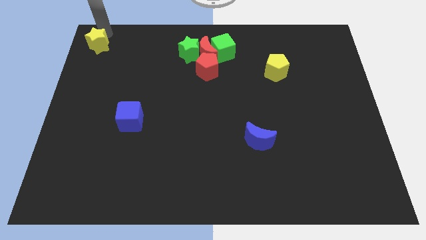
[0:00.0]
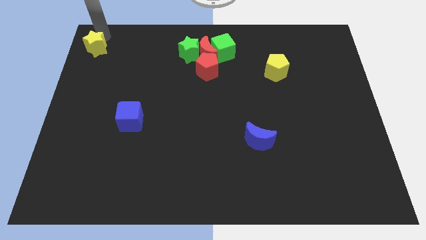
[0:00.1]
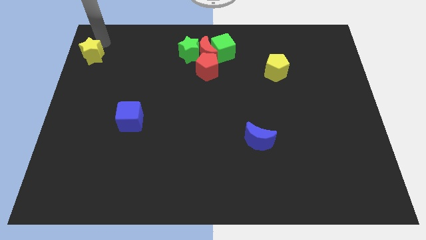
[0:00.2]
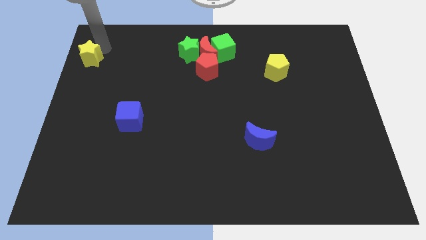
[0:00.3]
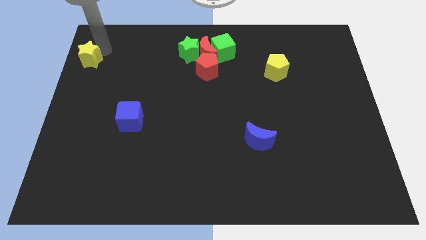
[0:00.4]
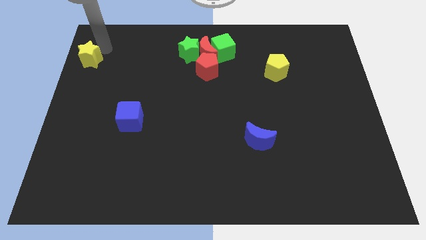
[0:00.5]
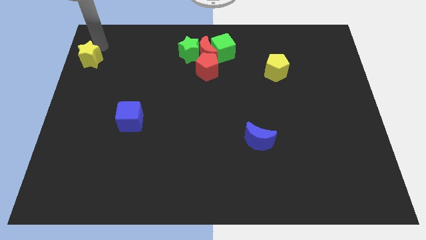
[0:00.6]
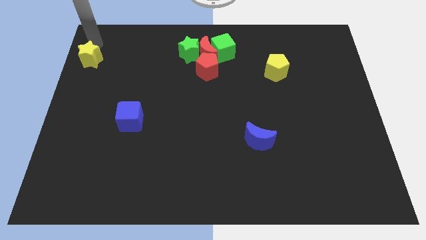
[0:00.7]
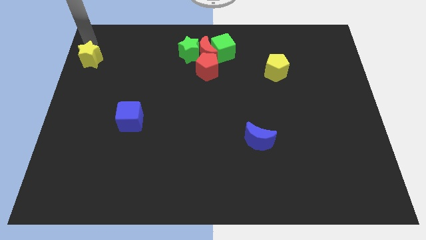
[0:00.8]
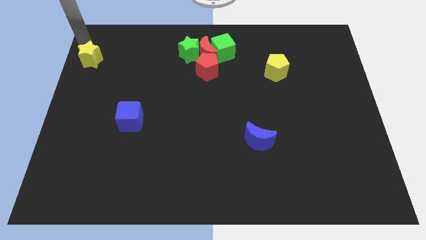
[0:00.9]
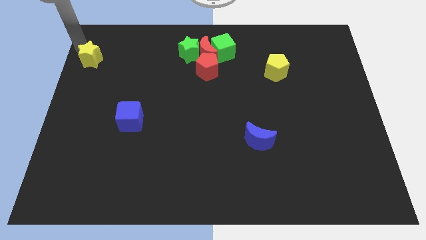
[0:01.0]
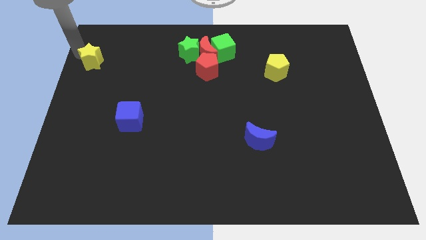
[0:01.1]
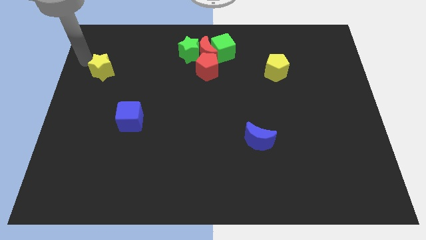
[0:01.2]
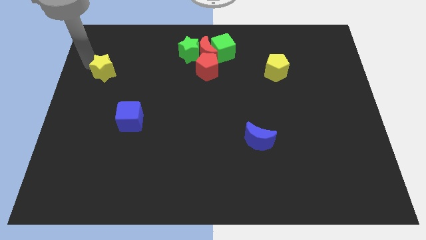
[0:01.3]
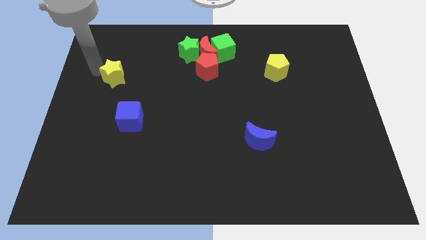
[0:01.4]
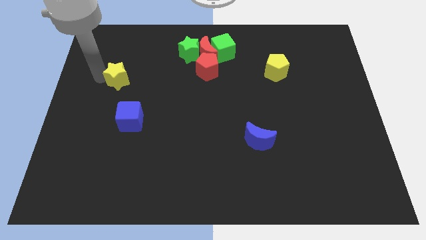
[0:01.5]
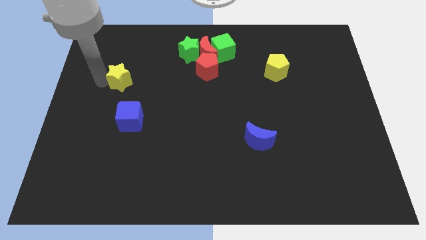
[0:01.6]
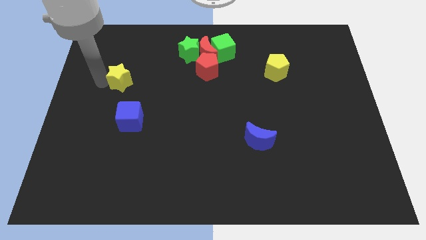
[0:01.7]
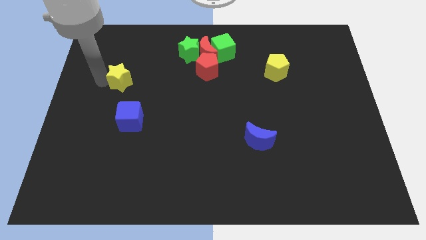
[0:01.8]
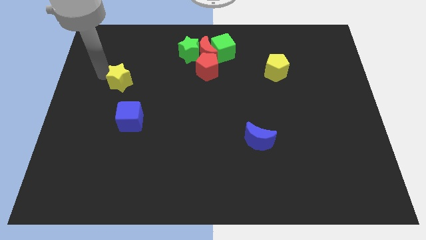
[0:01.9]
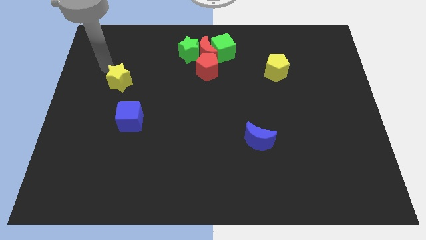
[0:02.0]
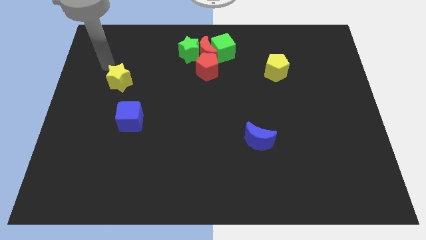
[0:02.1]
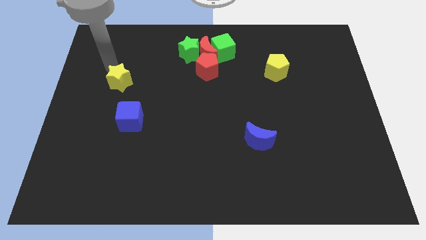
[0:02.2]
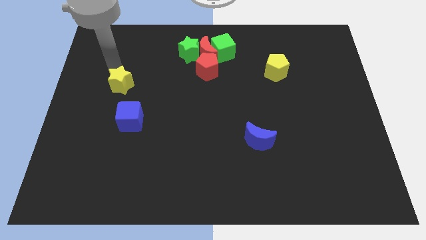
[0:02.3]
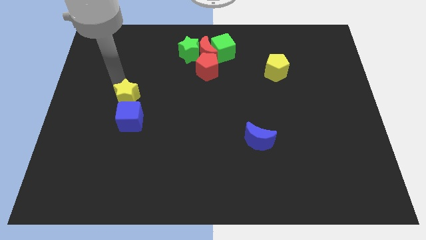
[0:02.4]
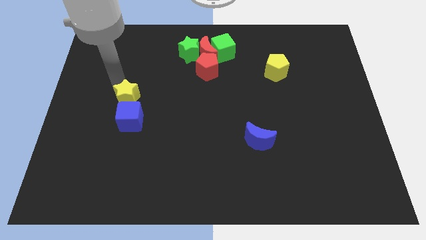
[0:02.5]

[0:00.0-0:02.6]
place the yellow star above the blue cube

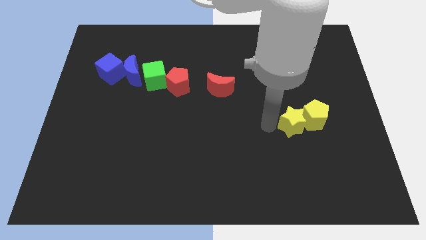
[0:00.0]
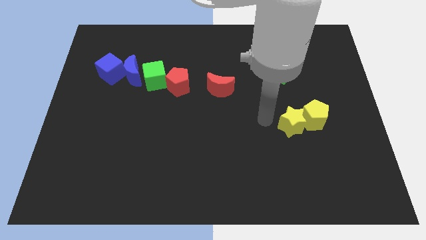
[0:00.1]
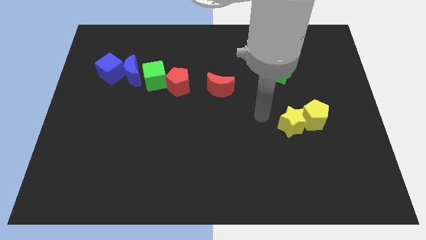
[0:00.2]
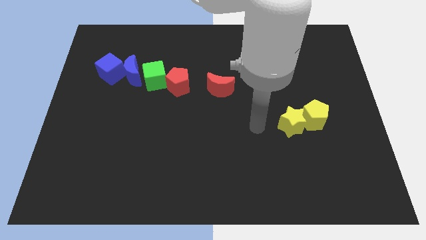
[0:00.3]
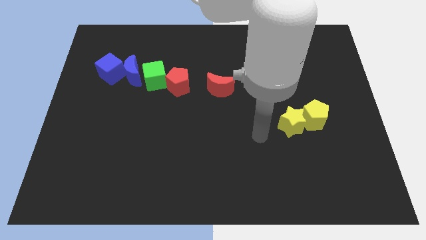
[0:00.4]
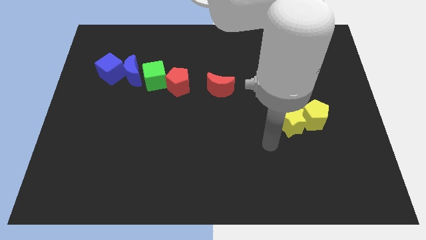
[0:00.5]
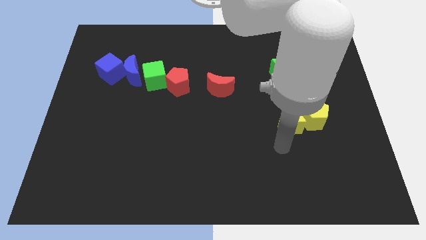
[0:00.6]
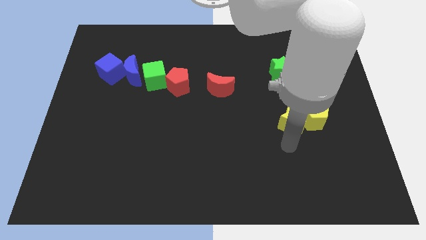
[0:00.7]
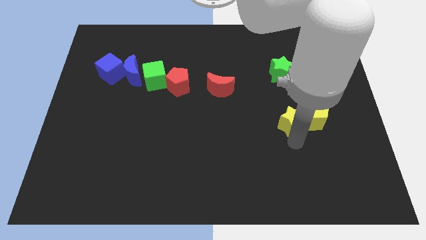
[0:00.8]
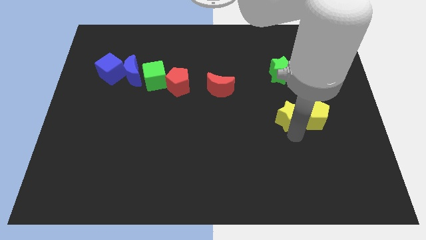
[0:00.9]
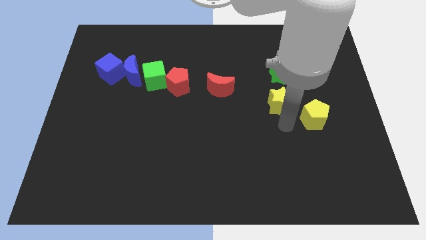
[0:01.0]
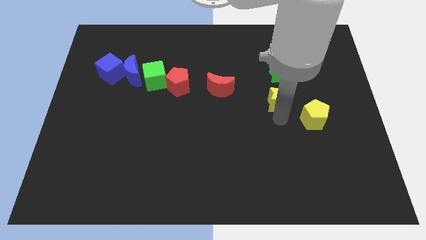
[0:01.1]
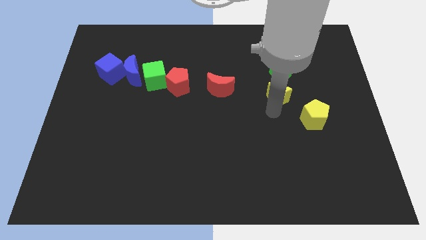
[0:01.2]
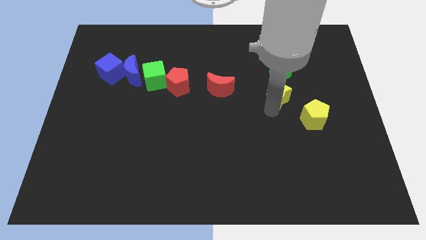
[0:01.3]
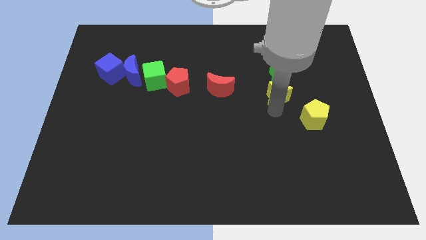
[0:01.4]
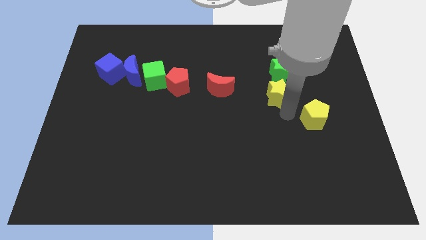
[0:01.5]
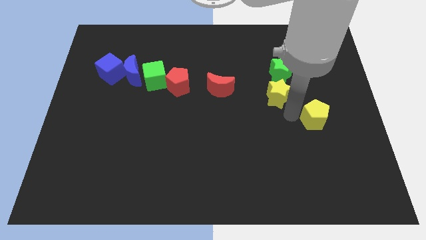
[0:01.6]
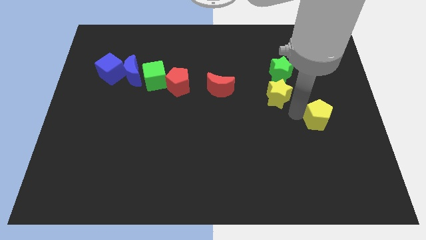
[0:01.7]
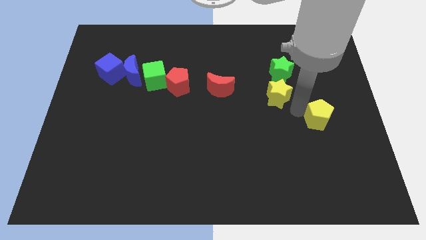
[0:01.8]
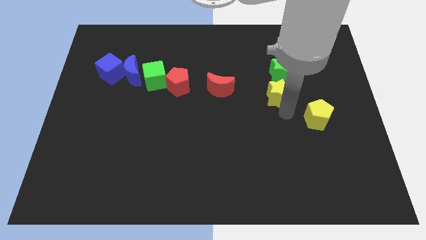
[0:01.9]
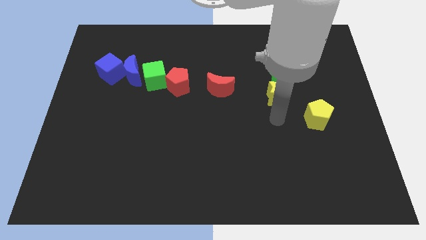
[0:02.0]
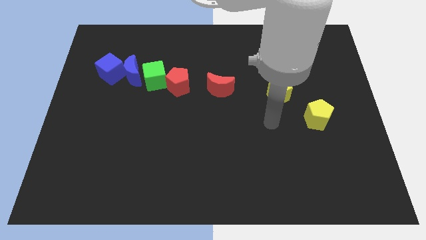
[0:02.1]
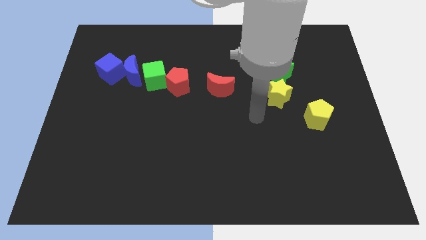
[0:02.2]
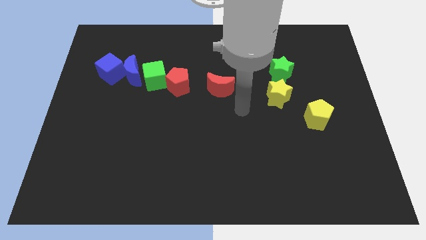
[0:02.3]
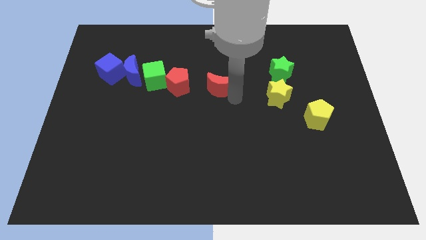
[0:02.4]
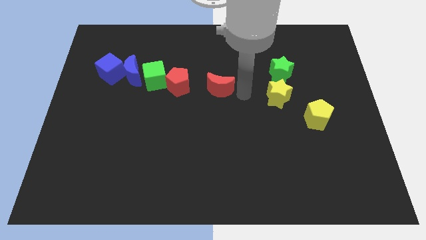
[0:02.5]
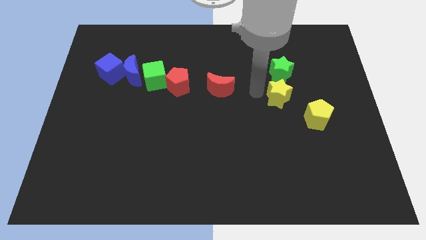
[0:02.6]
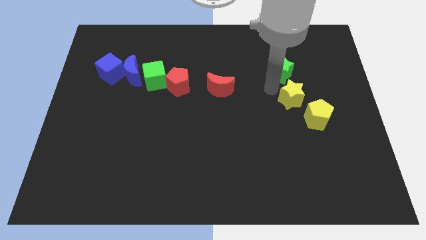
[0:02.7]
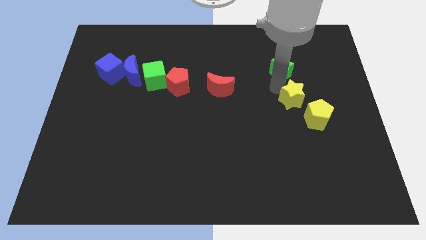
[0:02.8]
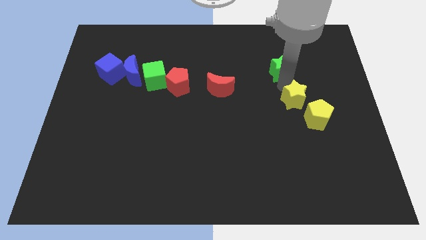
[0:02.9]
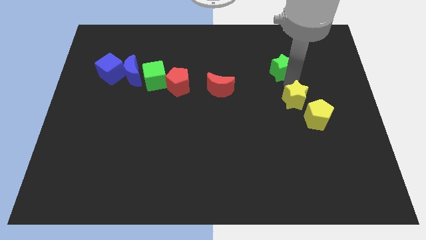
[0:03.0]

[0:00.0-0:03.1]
place the yellow star at the top left of the yellow pentagon

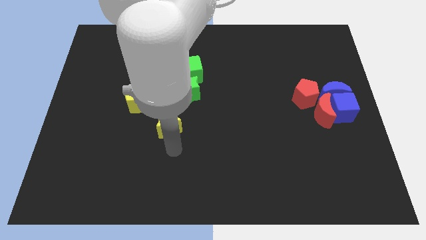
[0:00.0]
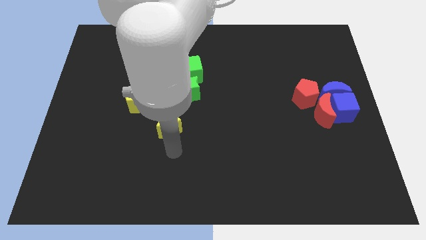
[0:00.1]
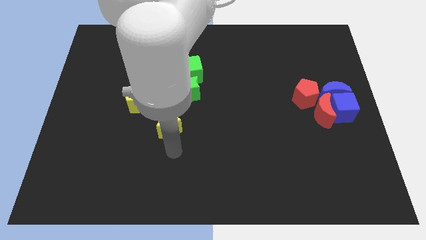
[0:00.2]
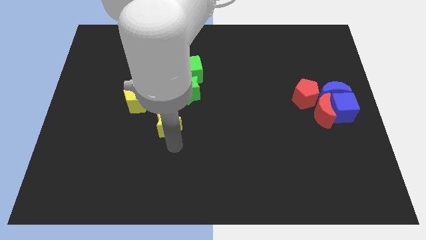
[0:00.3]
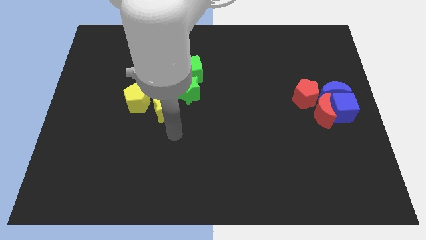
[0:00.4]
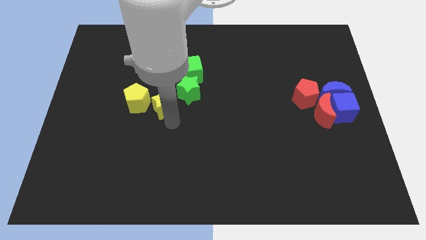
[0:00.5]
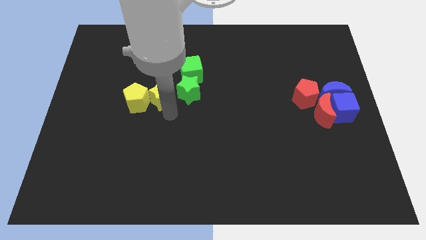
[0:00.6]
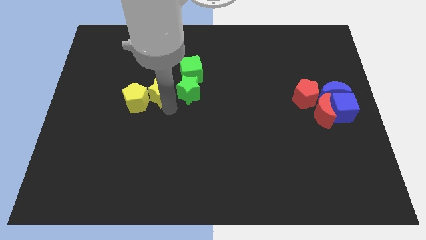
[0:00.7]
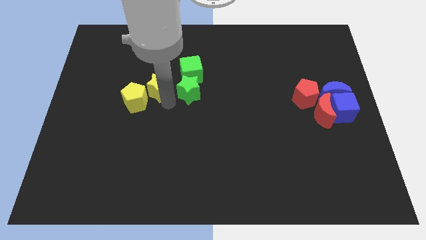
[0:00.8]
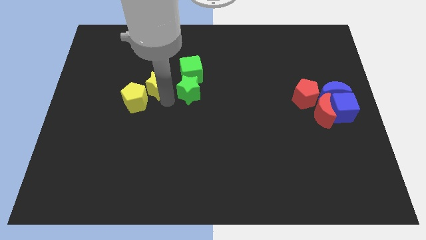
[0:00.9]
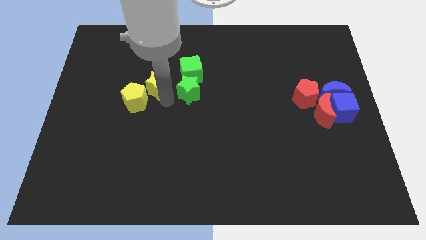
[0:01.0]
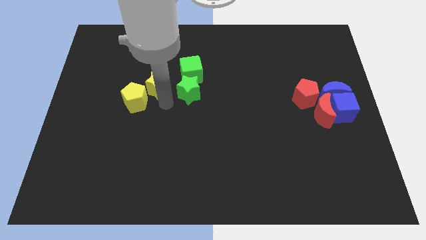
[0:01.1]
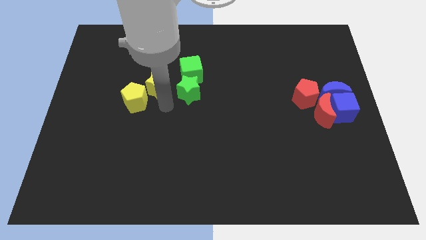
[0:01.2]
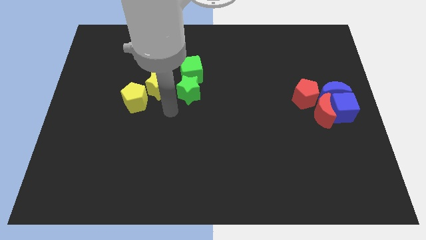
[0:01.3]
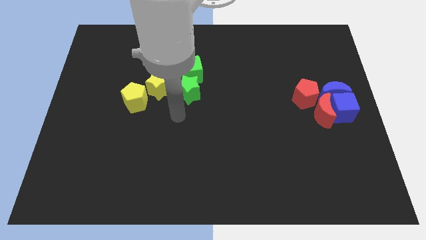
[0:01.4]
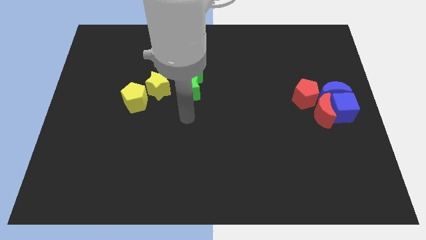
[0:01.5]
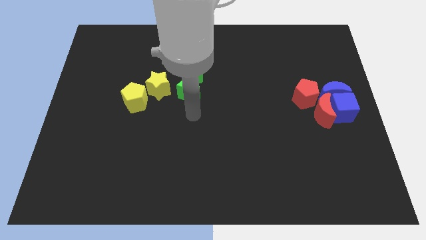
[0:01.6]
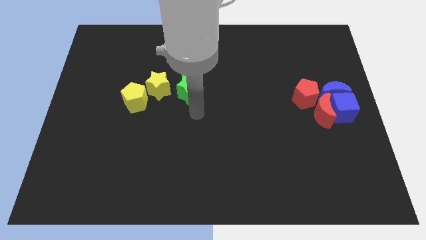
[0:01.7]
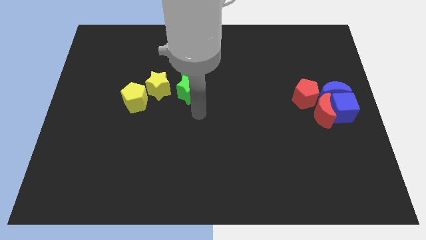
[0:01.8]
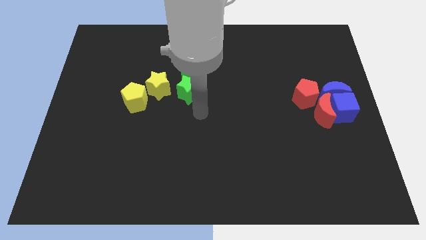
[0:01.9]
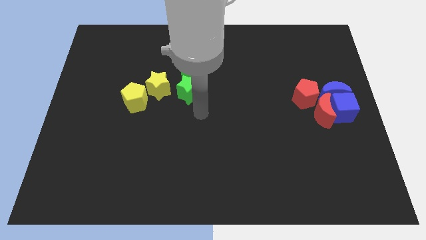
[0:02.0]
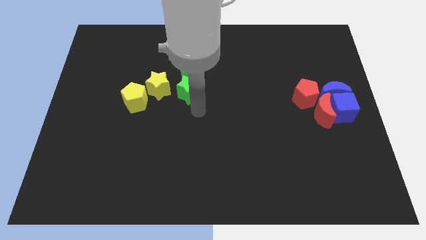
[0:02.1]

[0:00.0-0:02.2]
move the yellow star top left to the green star

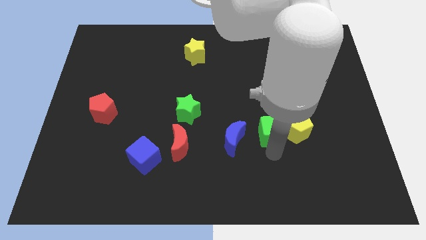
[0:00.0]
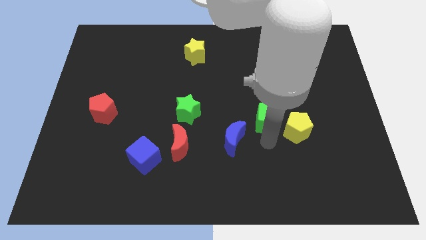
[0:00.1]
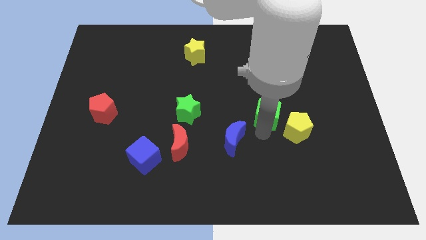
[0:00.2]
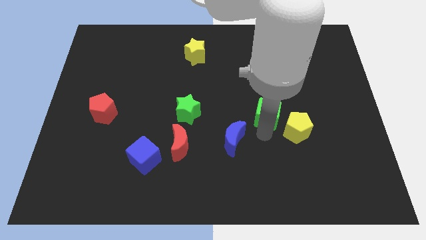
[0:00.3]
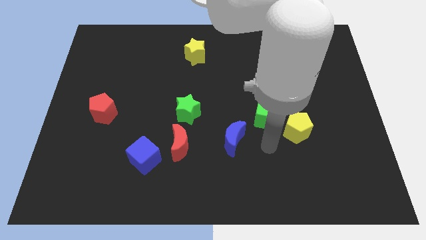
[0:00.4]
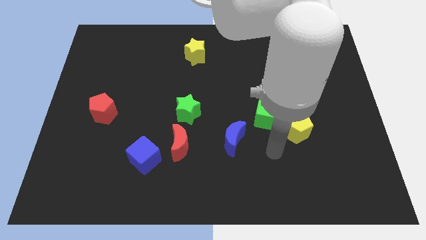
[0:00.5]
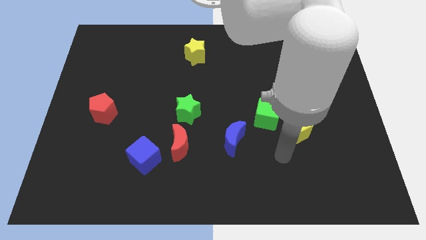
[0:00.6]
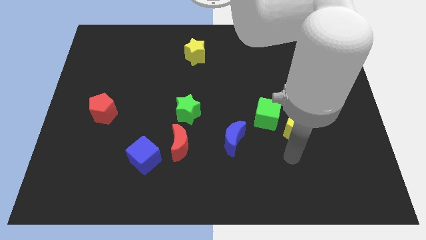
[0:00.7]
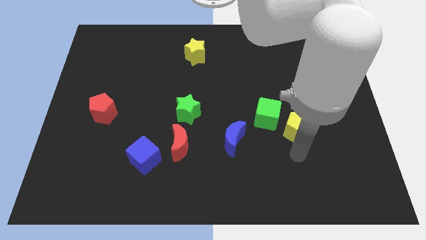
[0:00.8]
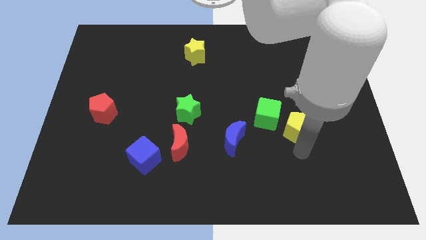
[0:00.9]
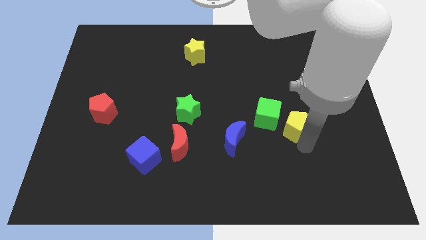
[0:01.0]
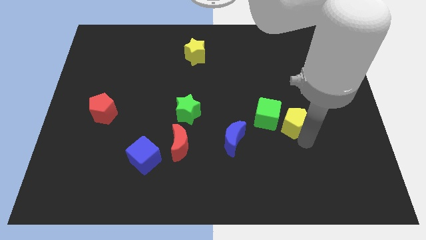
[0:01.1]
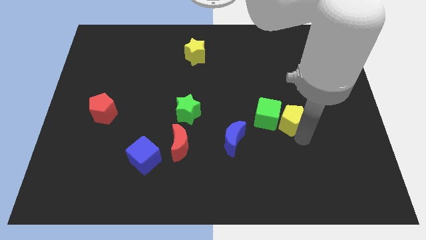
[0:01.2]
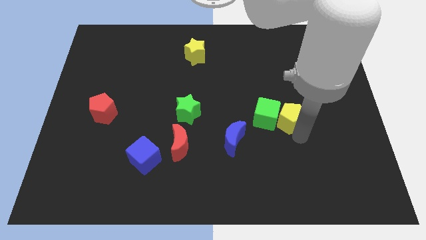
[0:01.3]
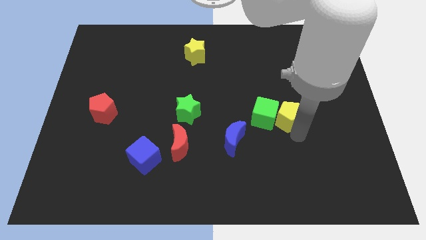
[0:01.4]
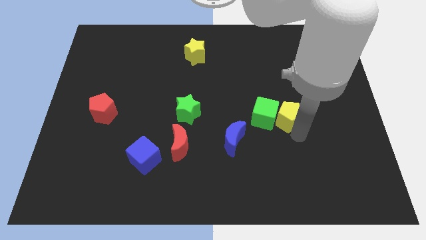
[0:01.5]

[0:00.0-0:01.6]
place the green cube to the right to the yellow pentagon
